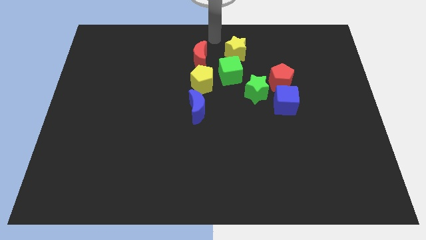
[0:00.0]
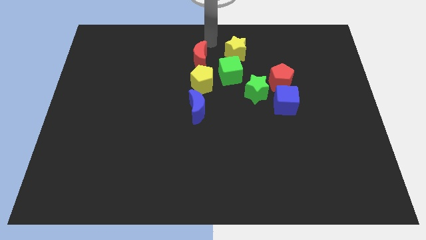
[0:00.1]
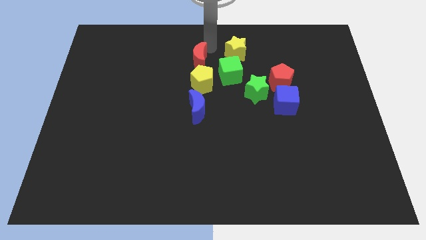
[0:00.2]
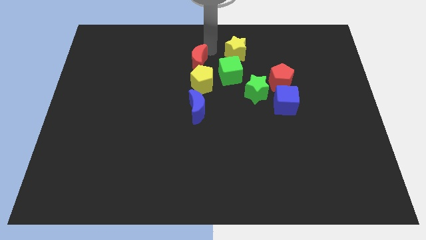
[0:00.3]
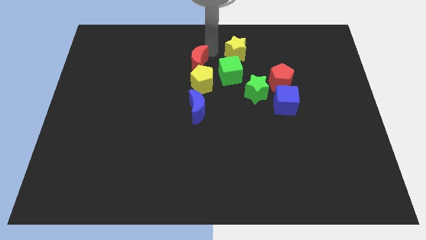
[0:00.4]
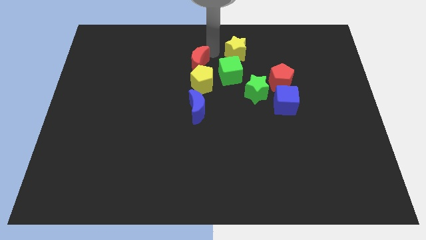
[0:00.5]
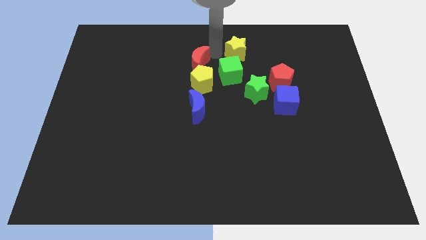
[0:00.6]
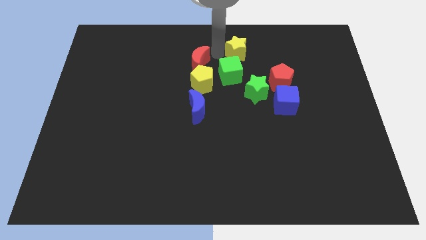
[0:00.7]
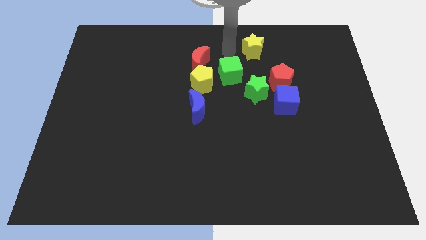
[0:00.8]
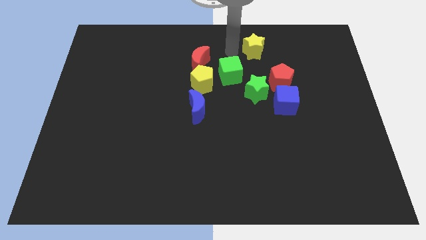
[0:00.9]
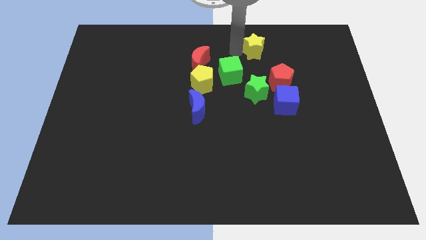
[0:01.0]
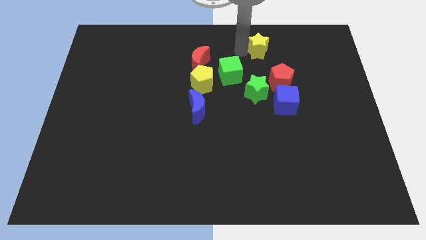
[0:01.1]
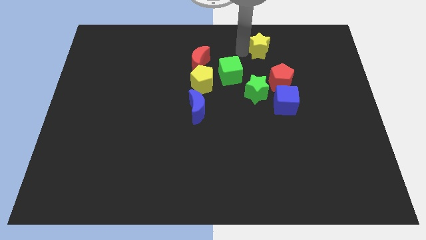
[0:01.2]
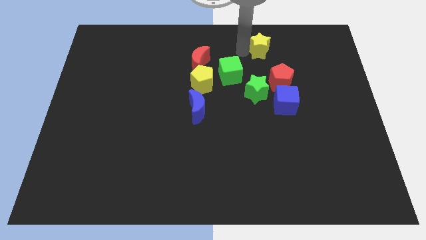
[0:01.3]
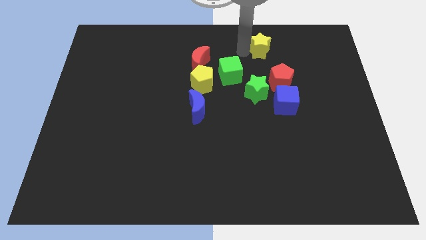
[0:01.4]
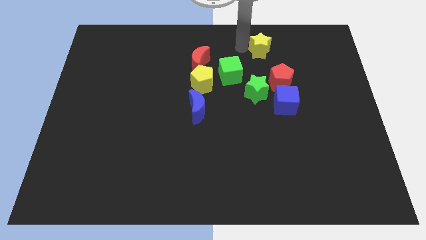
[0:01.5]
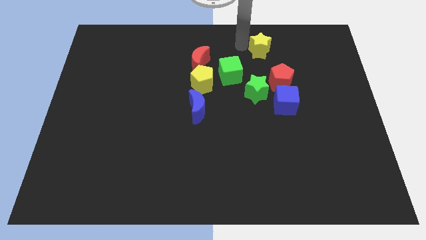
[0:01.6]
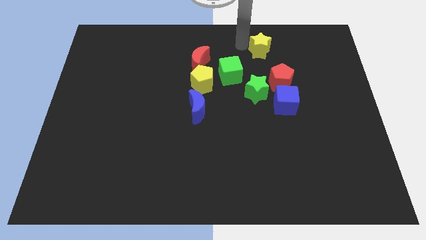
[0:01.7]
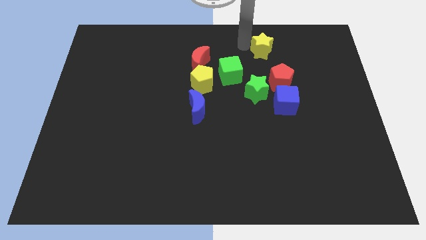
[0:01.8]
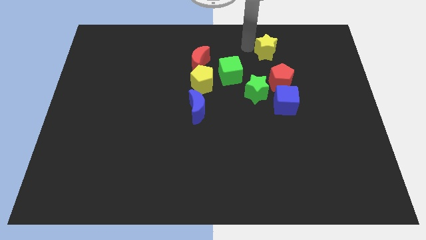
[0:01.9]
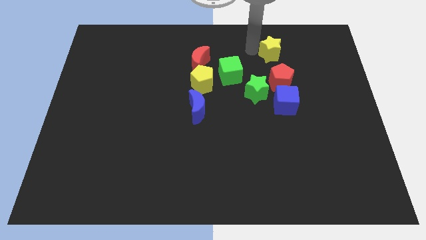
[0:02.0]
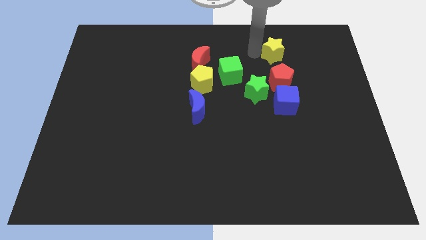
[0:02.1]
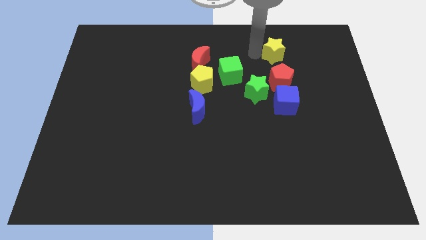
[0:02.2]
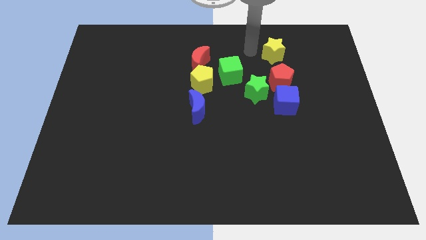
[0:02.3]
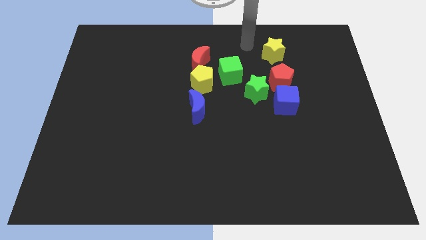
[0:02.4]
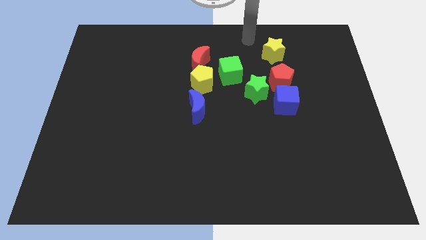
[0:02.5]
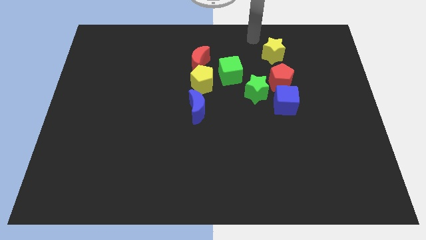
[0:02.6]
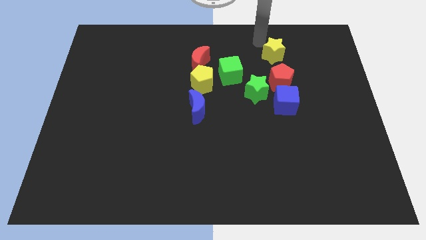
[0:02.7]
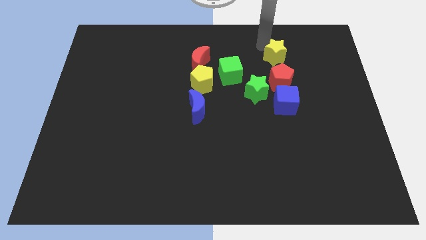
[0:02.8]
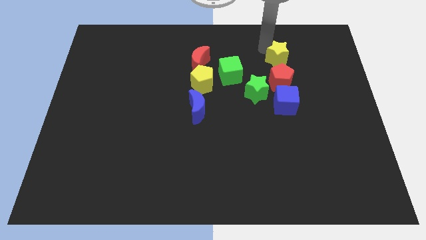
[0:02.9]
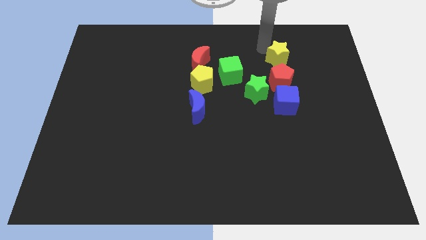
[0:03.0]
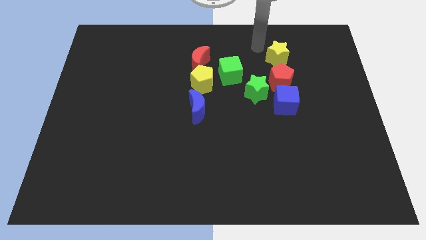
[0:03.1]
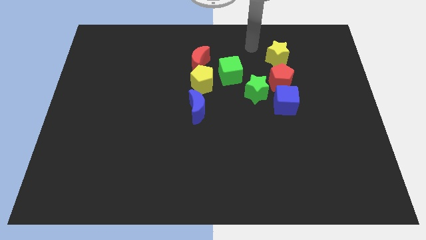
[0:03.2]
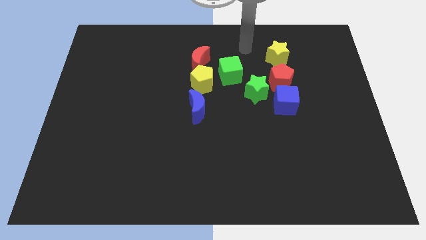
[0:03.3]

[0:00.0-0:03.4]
move the yellow star above to the red pentagon

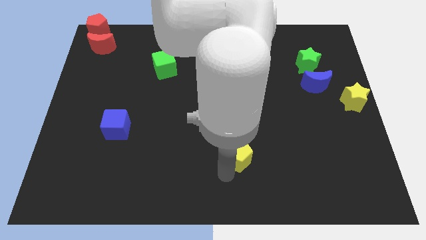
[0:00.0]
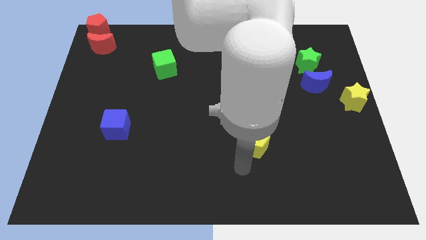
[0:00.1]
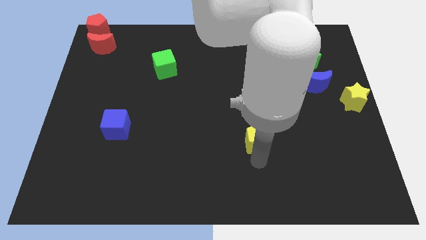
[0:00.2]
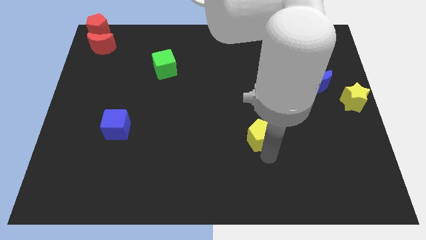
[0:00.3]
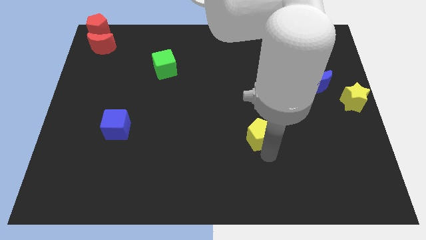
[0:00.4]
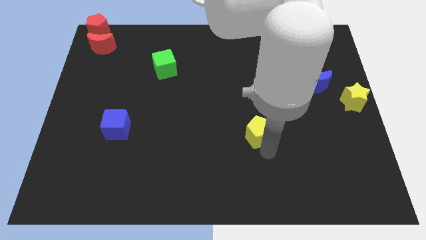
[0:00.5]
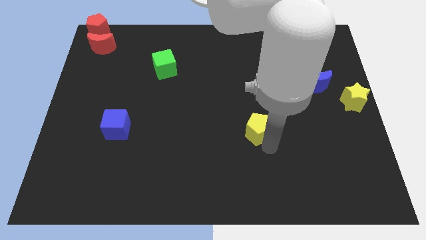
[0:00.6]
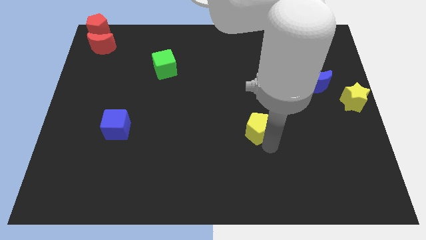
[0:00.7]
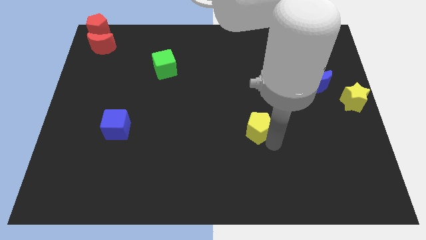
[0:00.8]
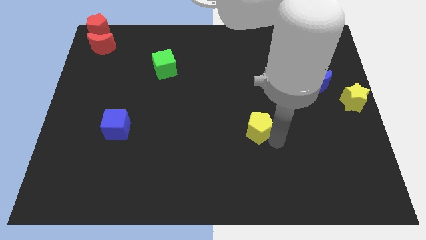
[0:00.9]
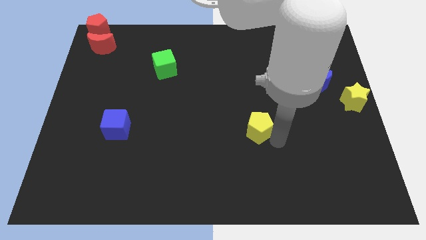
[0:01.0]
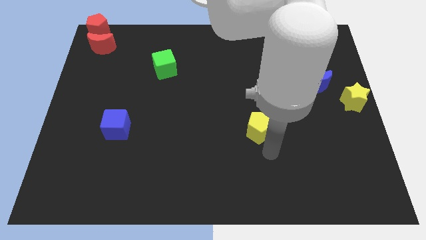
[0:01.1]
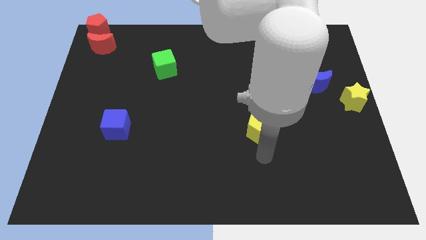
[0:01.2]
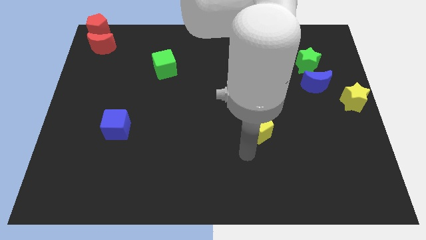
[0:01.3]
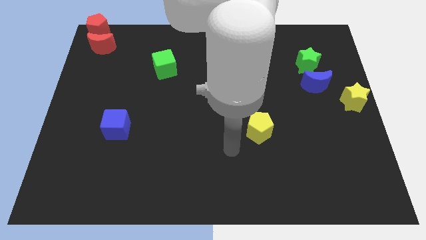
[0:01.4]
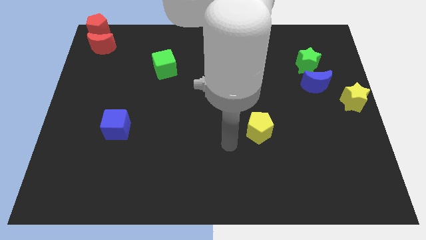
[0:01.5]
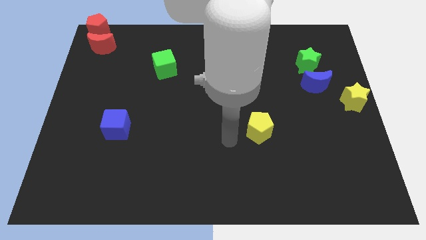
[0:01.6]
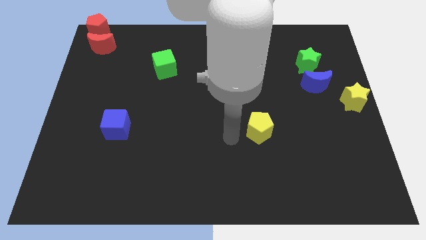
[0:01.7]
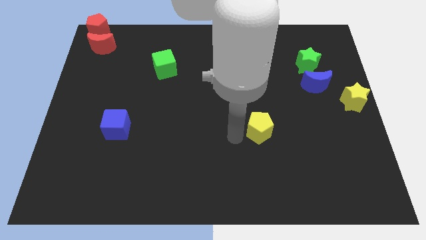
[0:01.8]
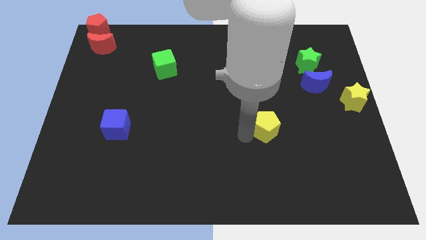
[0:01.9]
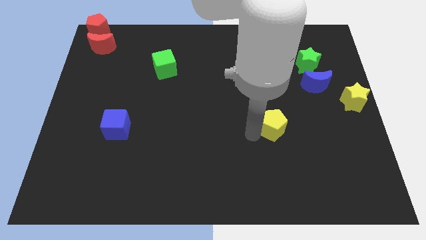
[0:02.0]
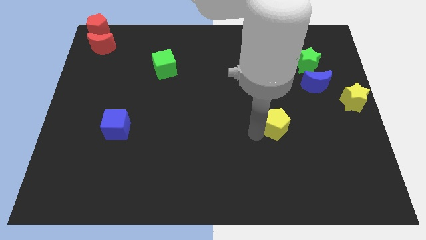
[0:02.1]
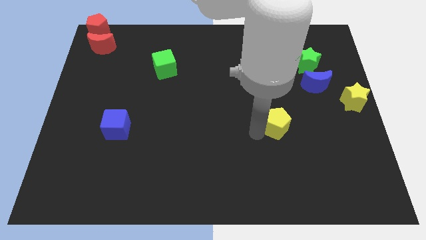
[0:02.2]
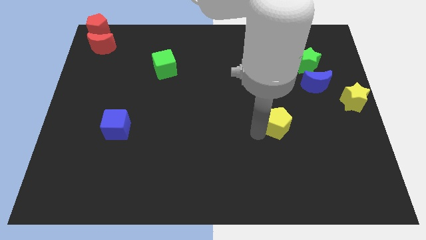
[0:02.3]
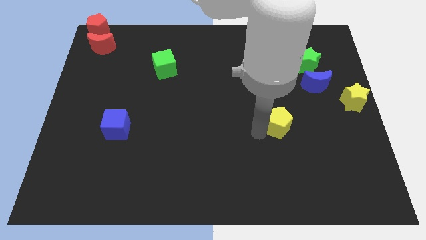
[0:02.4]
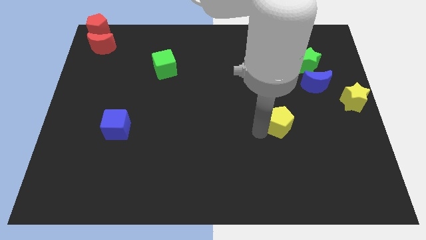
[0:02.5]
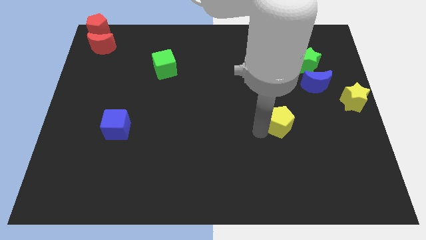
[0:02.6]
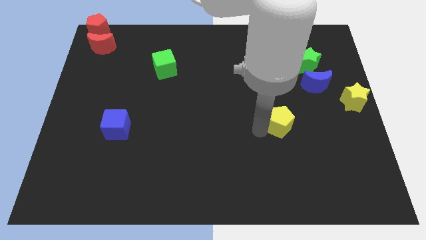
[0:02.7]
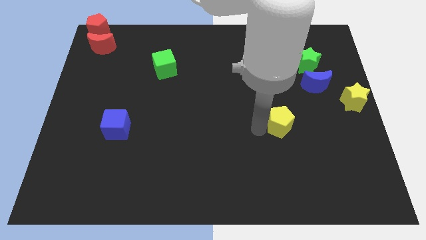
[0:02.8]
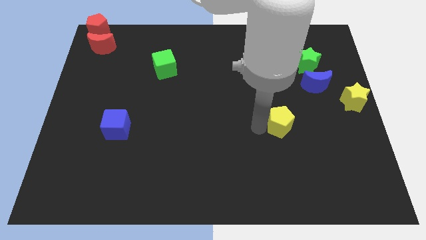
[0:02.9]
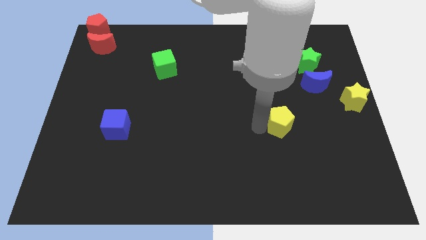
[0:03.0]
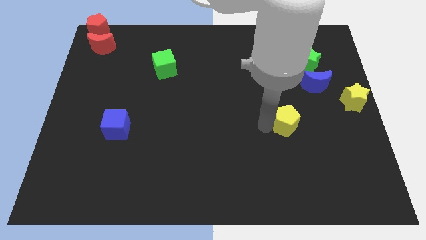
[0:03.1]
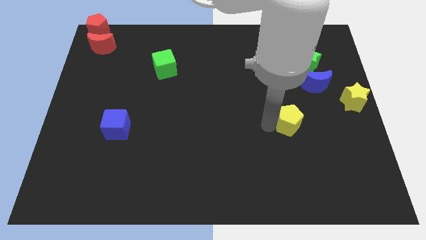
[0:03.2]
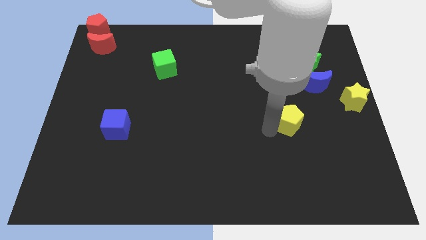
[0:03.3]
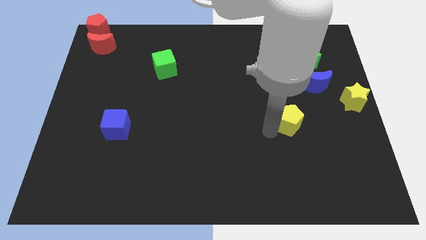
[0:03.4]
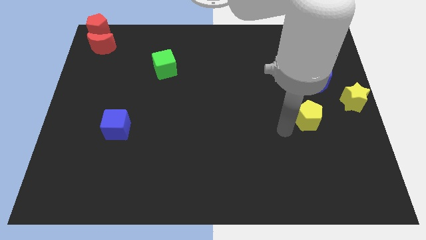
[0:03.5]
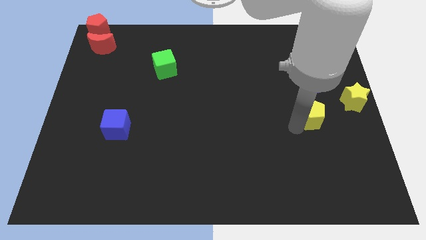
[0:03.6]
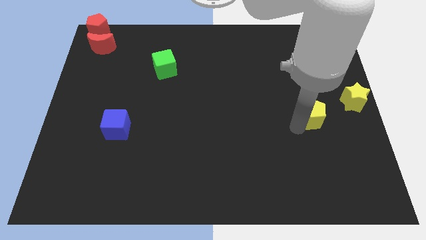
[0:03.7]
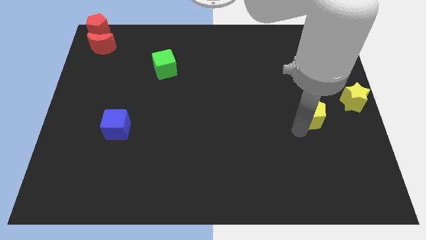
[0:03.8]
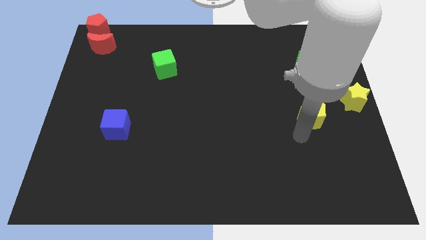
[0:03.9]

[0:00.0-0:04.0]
move yellow pentagon towards yellow star

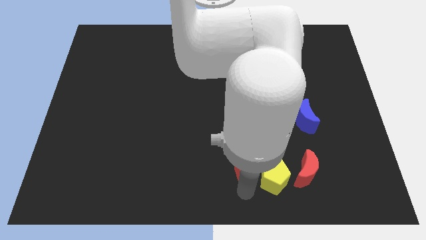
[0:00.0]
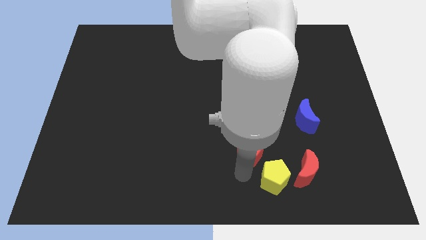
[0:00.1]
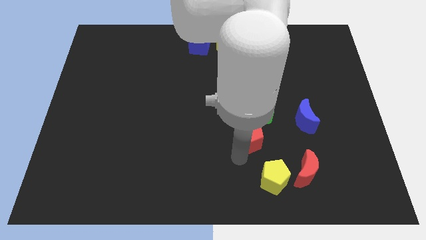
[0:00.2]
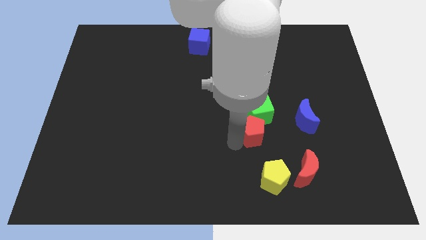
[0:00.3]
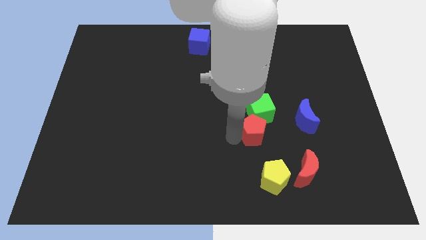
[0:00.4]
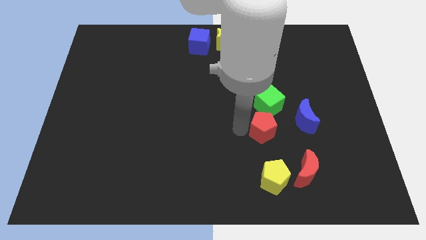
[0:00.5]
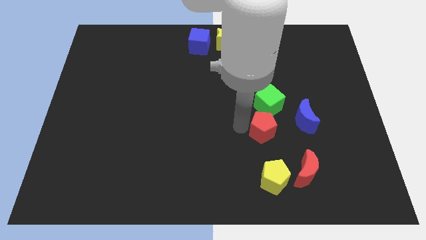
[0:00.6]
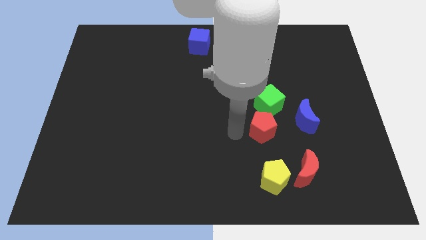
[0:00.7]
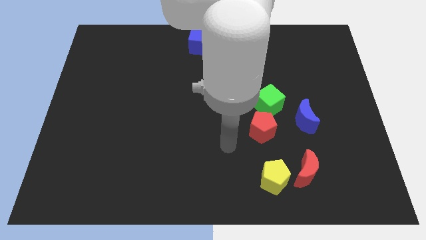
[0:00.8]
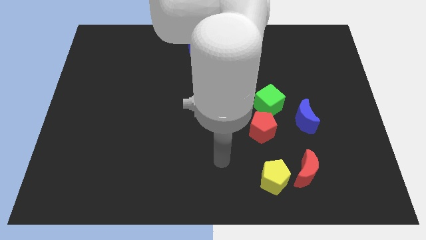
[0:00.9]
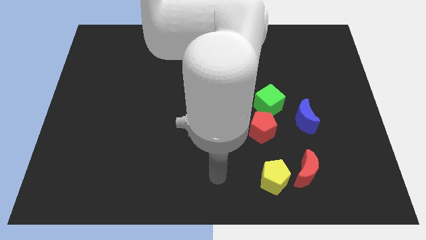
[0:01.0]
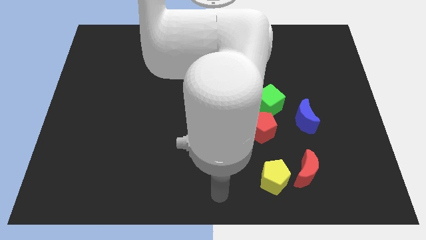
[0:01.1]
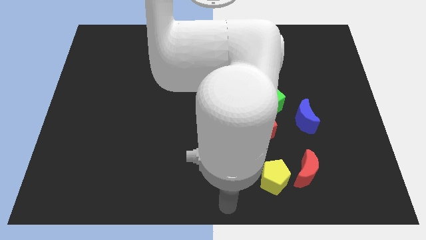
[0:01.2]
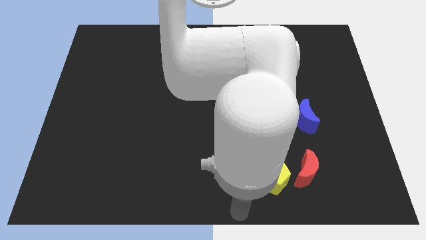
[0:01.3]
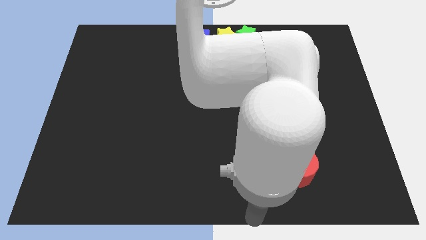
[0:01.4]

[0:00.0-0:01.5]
push the red pentagon into the green cube

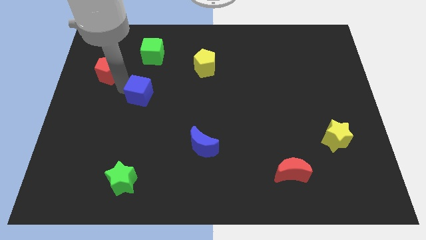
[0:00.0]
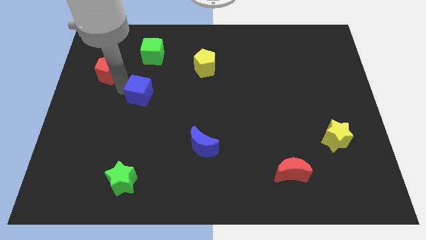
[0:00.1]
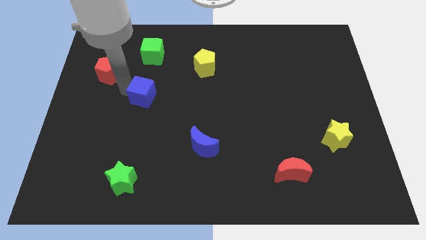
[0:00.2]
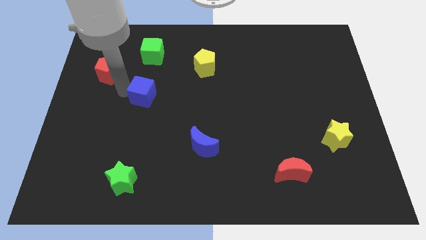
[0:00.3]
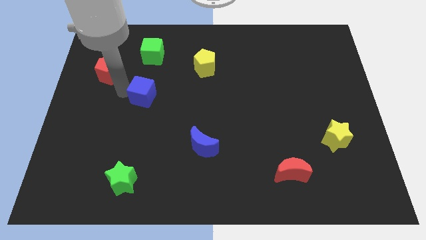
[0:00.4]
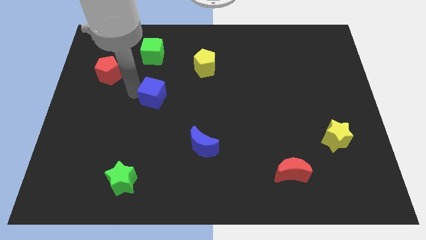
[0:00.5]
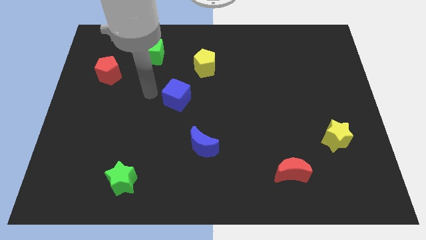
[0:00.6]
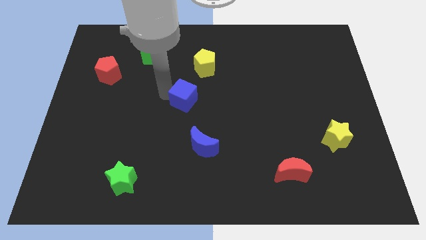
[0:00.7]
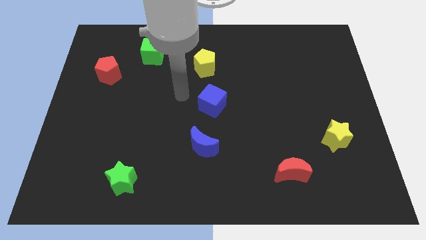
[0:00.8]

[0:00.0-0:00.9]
put the blue cube vertically above the blue moon
